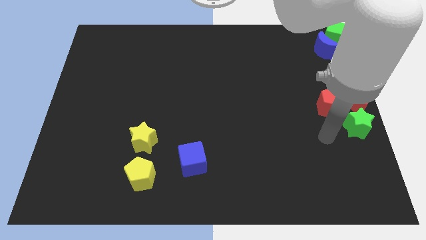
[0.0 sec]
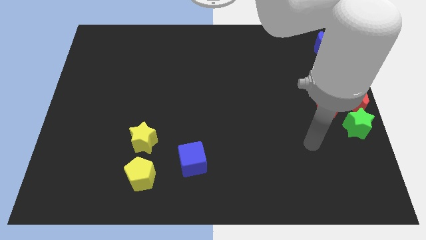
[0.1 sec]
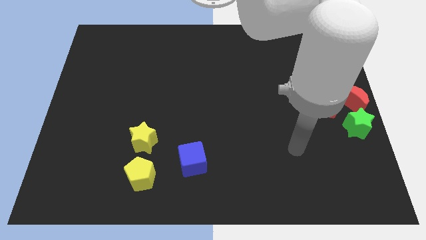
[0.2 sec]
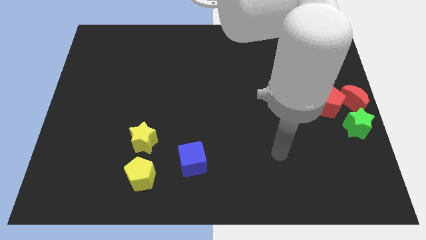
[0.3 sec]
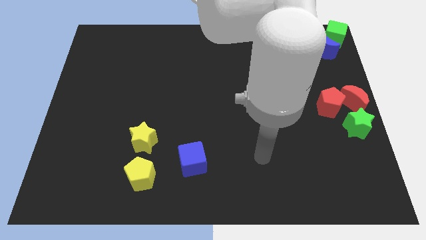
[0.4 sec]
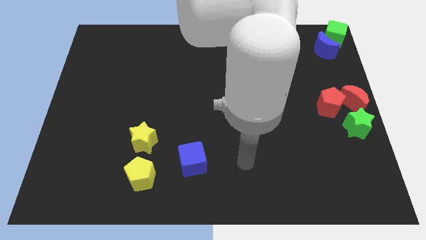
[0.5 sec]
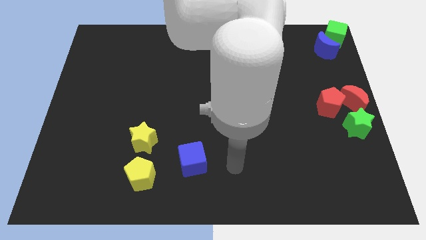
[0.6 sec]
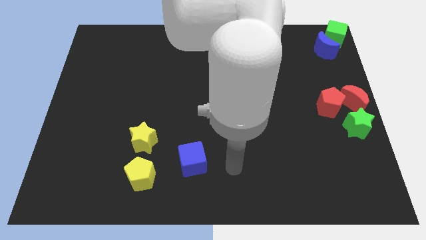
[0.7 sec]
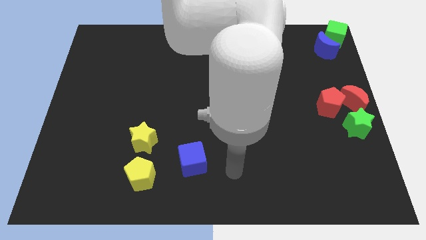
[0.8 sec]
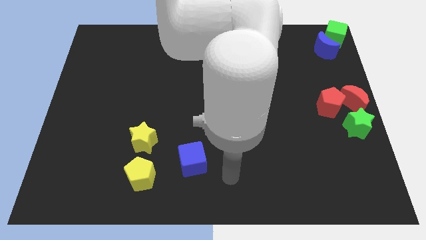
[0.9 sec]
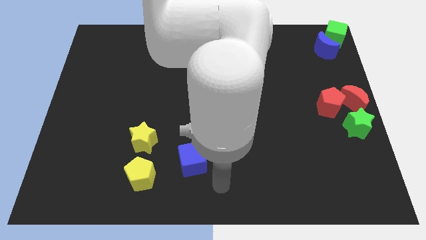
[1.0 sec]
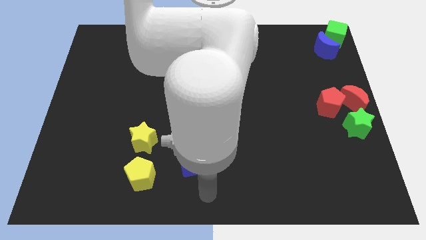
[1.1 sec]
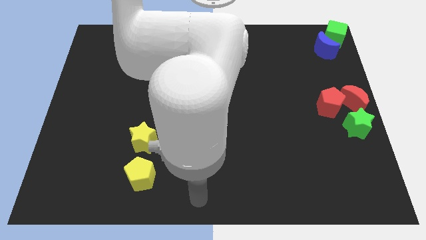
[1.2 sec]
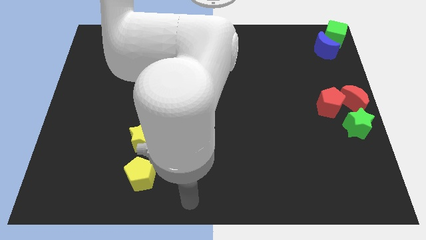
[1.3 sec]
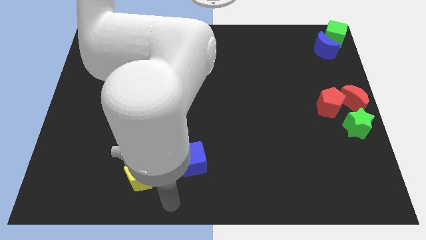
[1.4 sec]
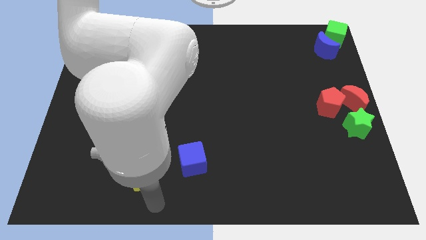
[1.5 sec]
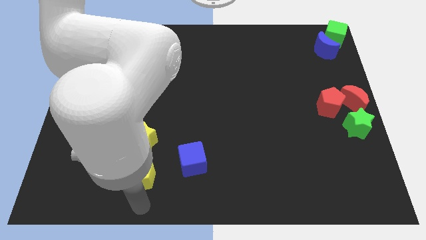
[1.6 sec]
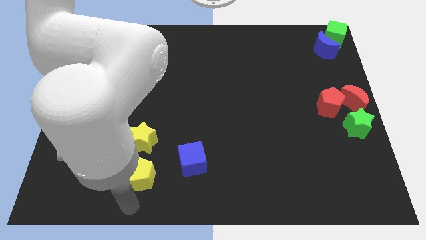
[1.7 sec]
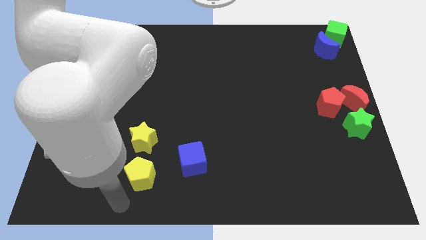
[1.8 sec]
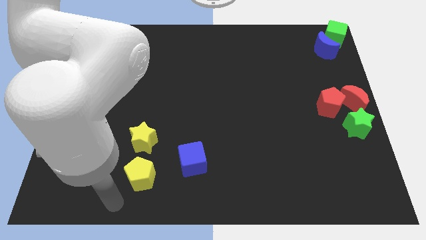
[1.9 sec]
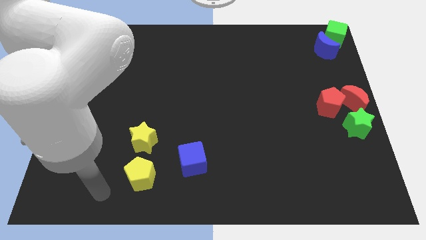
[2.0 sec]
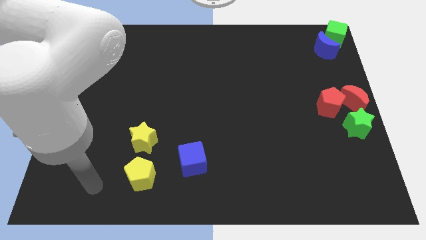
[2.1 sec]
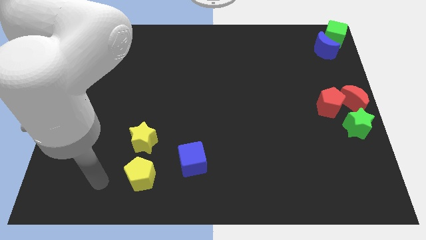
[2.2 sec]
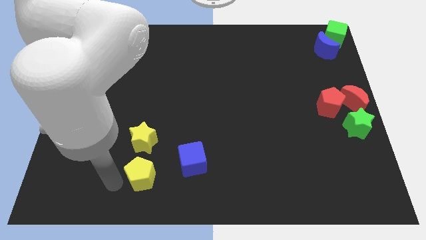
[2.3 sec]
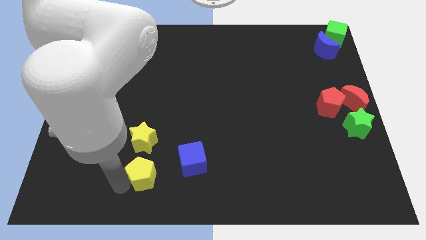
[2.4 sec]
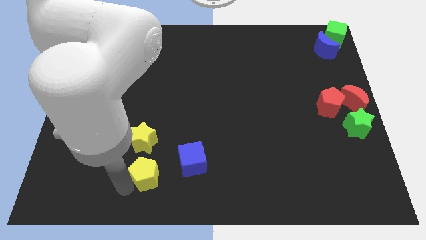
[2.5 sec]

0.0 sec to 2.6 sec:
move your arm and slightly push the yellow pentagon

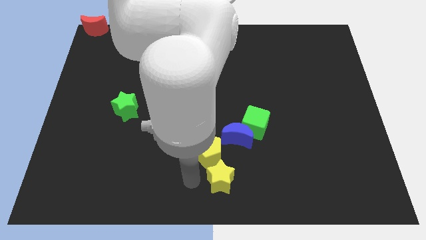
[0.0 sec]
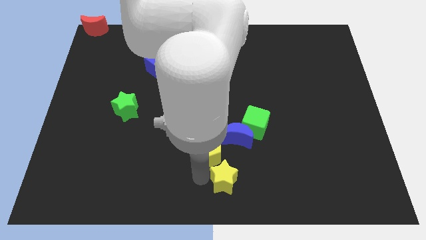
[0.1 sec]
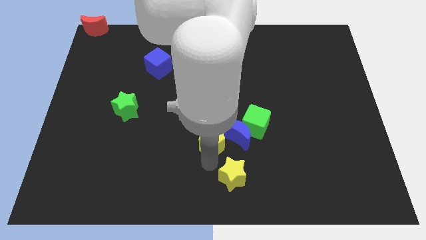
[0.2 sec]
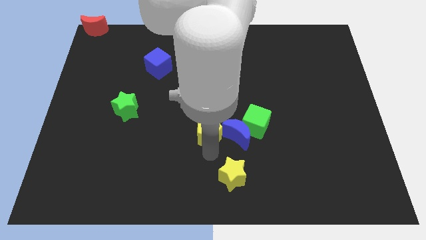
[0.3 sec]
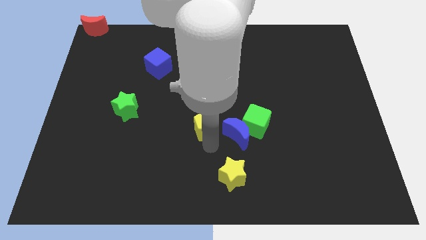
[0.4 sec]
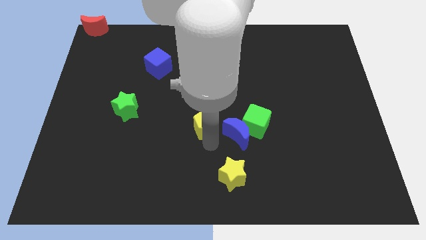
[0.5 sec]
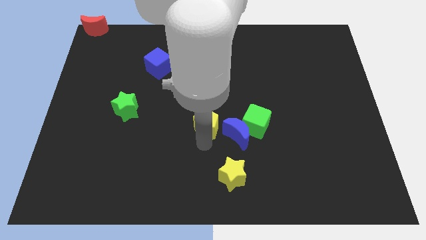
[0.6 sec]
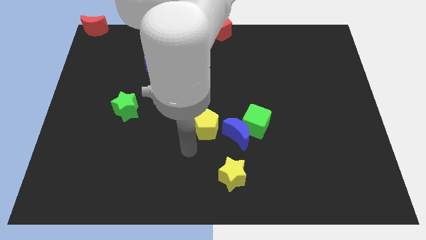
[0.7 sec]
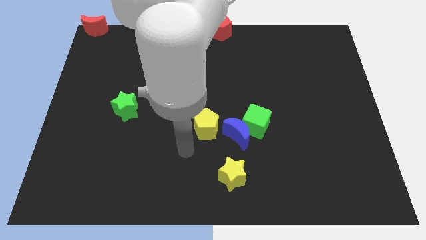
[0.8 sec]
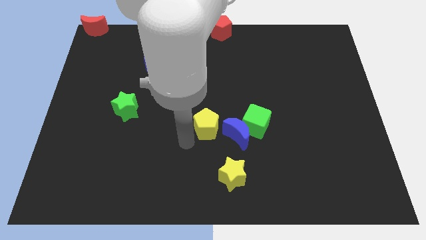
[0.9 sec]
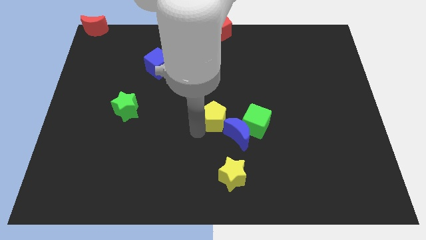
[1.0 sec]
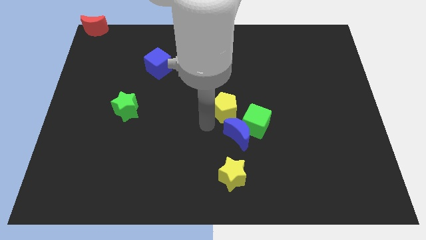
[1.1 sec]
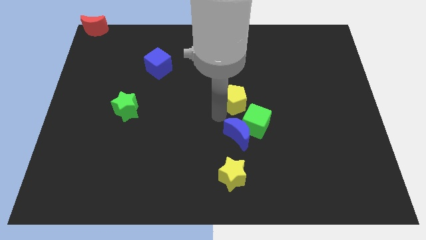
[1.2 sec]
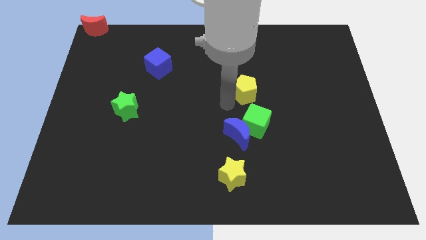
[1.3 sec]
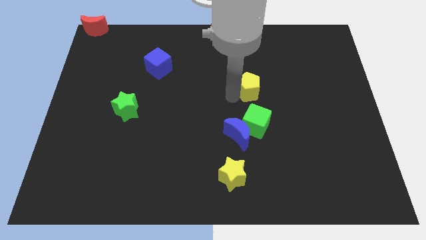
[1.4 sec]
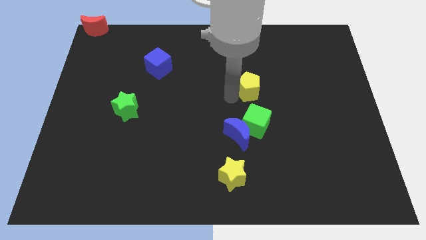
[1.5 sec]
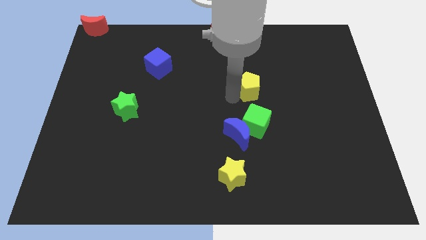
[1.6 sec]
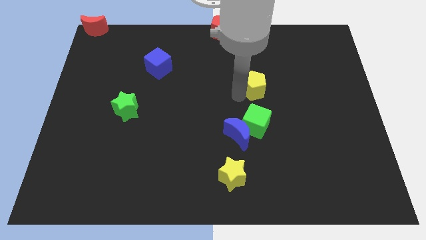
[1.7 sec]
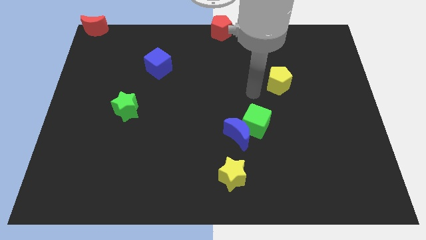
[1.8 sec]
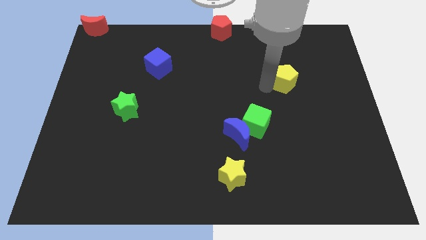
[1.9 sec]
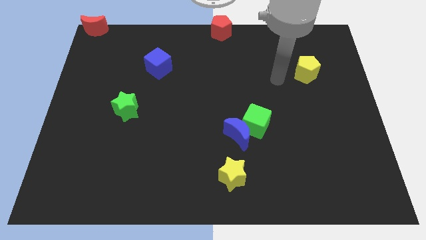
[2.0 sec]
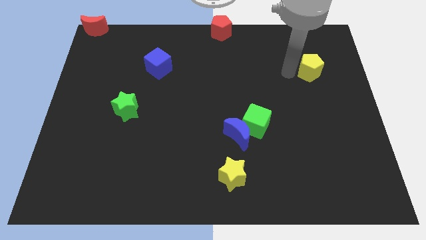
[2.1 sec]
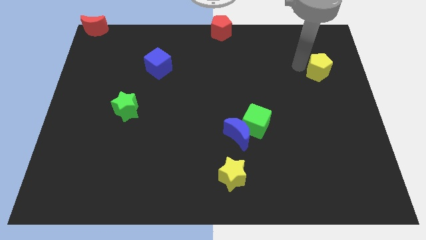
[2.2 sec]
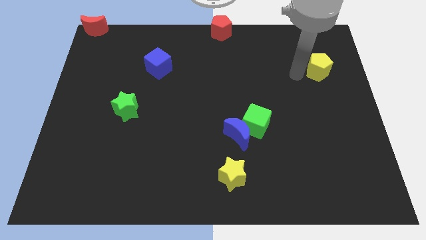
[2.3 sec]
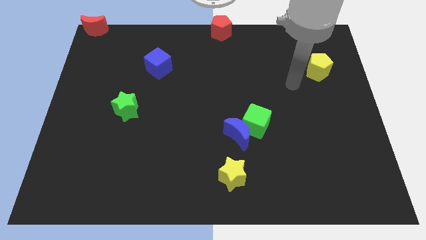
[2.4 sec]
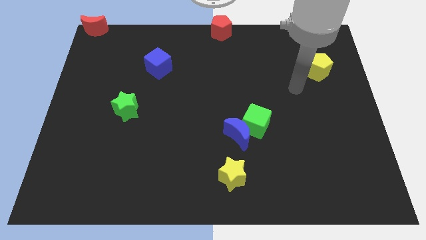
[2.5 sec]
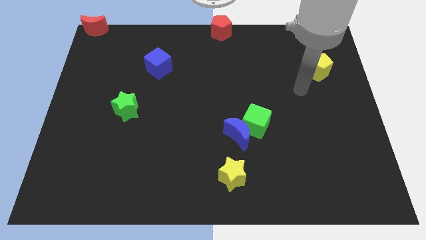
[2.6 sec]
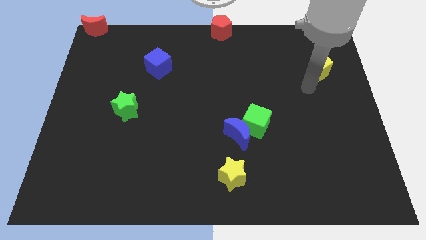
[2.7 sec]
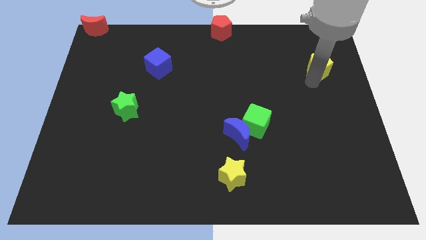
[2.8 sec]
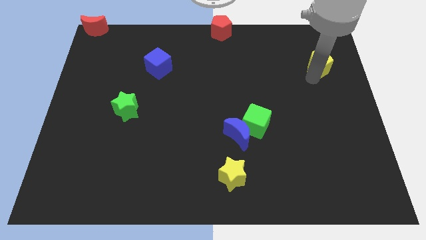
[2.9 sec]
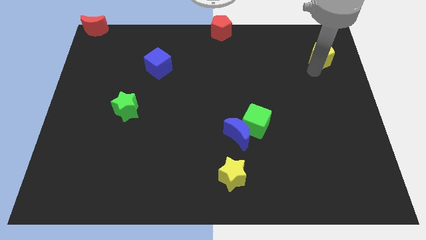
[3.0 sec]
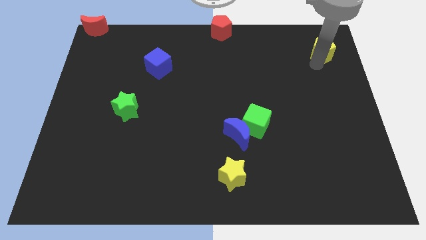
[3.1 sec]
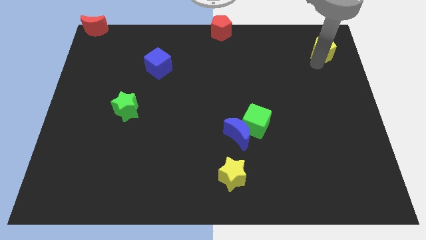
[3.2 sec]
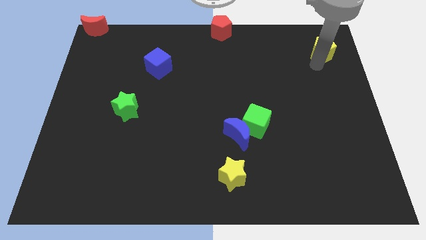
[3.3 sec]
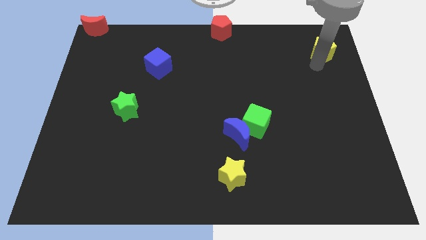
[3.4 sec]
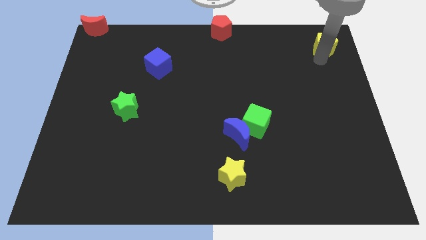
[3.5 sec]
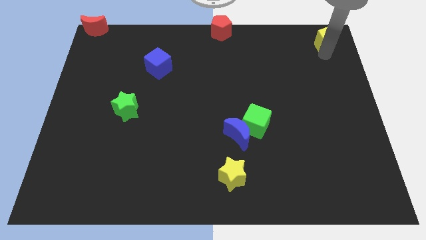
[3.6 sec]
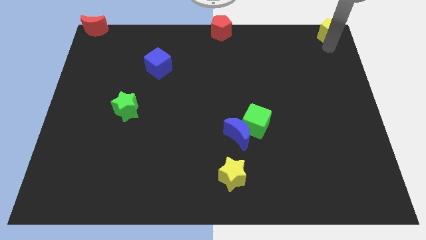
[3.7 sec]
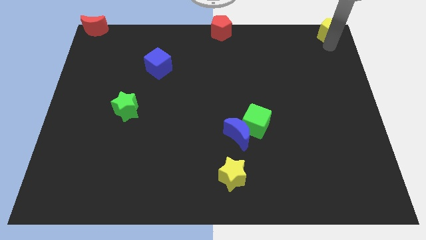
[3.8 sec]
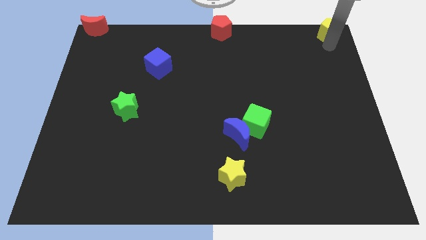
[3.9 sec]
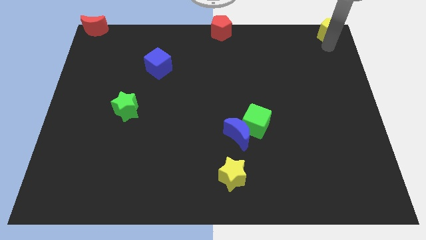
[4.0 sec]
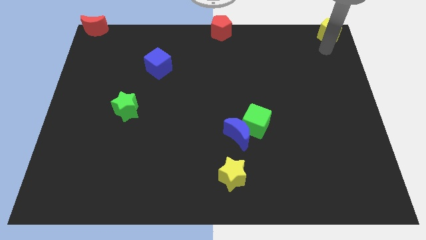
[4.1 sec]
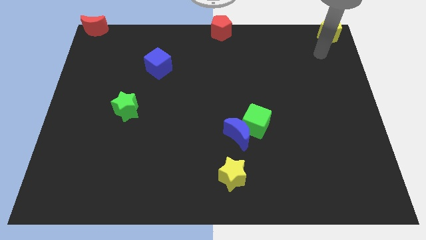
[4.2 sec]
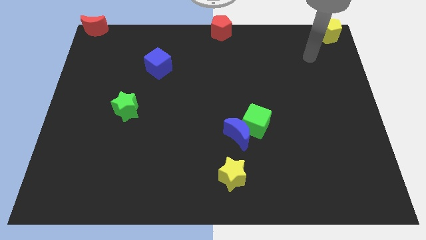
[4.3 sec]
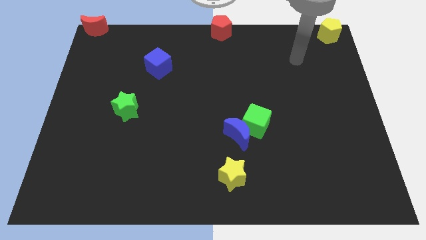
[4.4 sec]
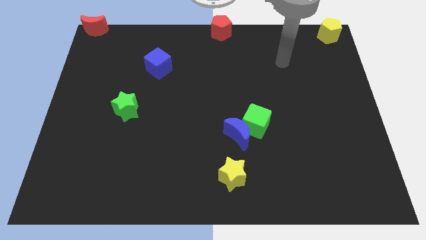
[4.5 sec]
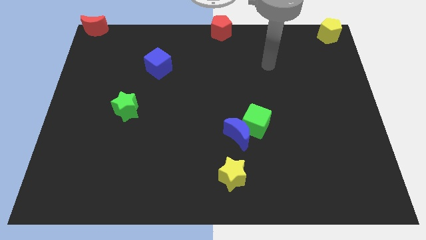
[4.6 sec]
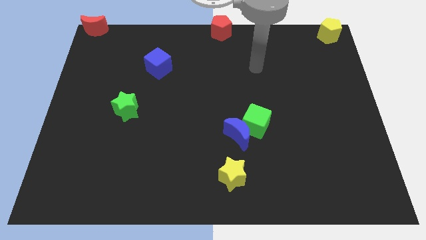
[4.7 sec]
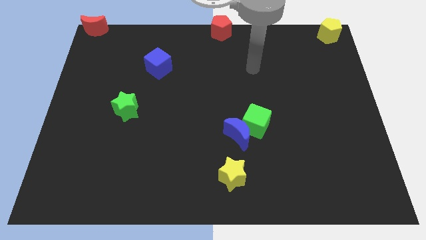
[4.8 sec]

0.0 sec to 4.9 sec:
move yellow pentagon to the top right corner

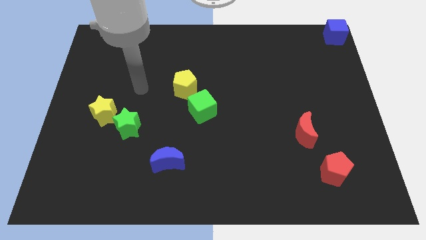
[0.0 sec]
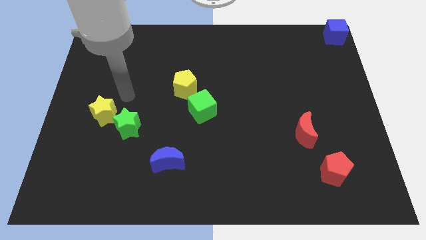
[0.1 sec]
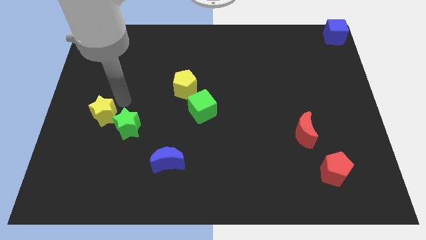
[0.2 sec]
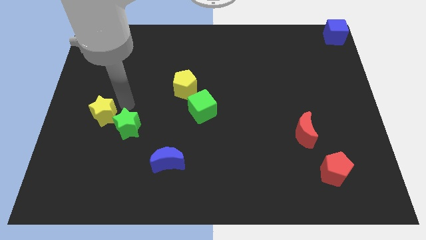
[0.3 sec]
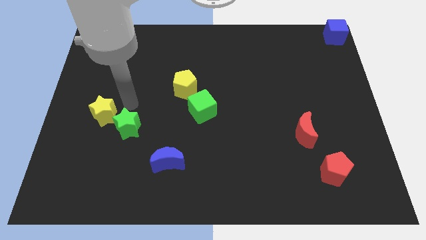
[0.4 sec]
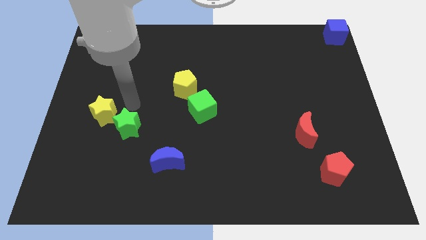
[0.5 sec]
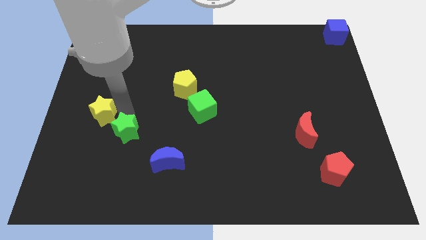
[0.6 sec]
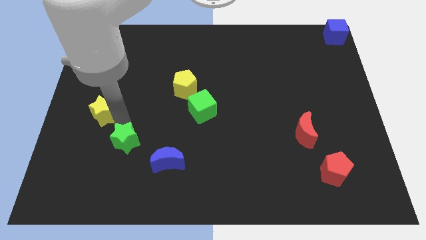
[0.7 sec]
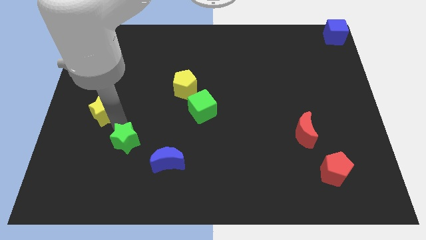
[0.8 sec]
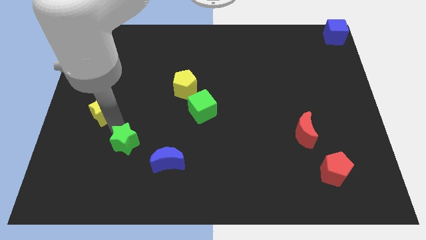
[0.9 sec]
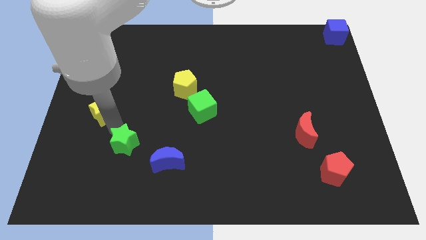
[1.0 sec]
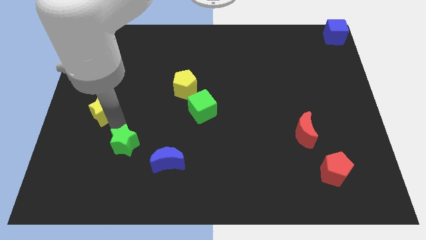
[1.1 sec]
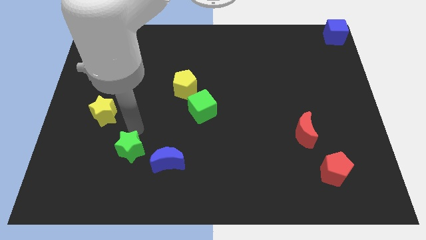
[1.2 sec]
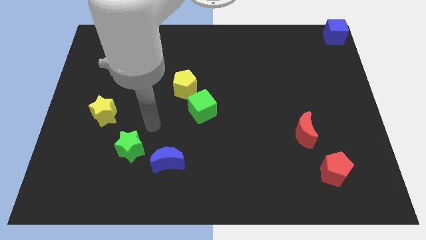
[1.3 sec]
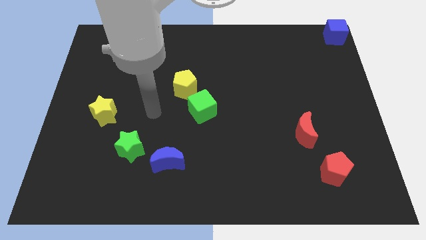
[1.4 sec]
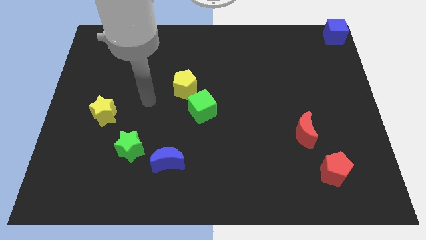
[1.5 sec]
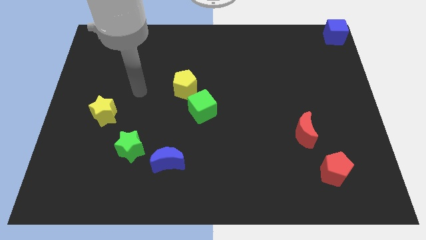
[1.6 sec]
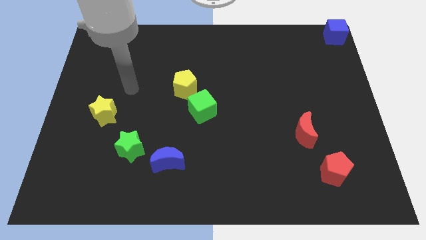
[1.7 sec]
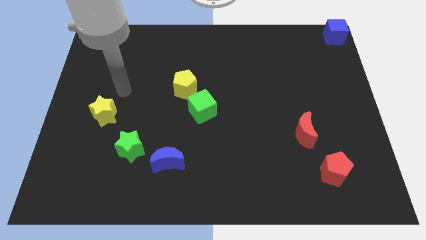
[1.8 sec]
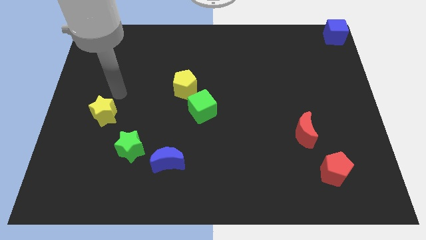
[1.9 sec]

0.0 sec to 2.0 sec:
separate green star from the yellow star
